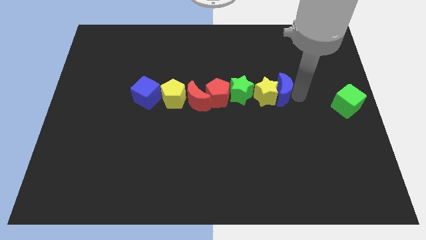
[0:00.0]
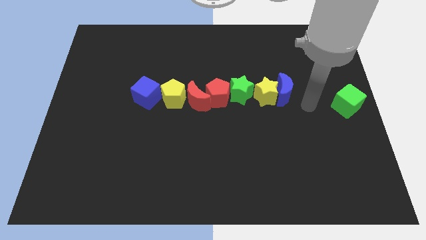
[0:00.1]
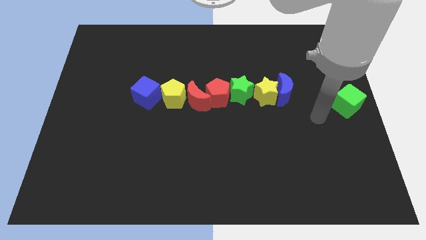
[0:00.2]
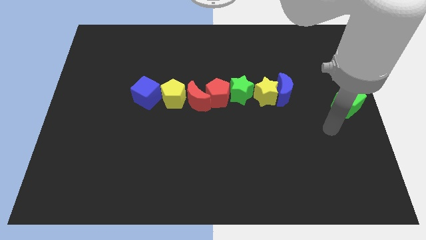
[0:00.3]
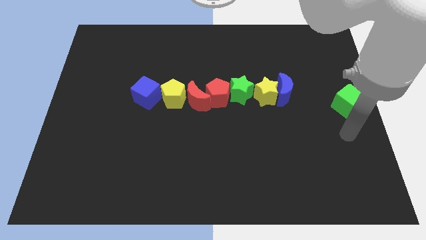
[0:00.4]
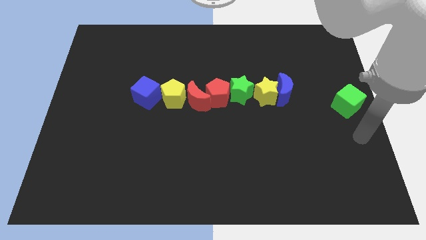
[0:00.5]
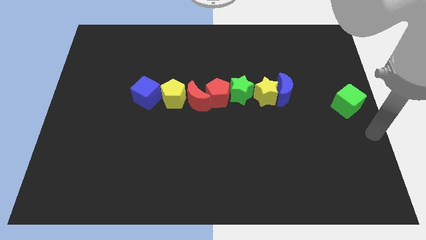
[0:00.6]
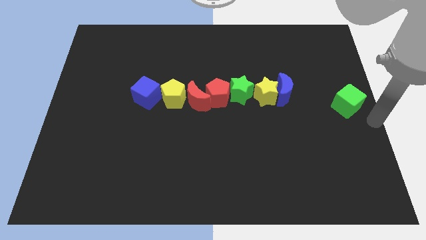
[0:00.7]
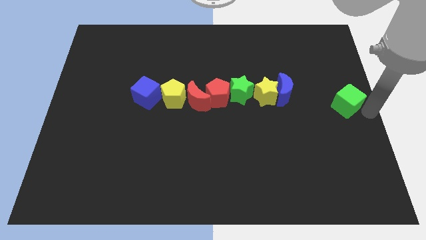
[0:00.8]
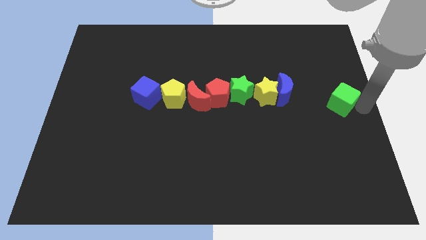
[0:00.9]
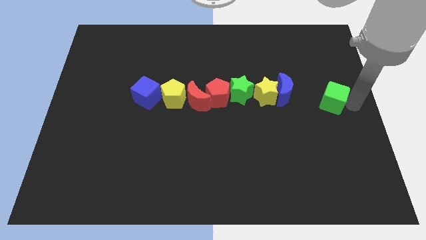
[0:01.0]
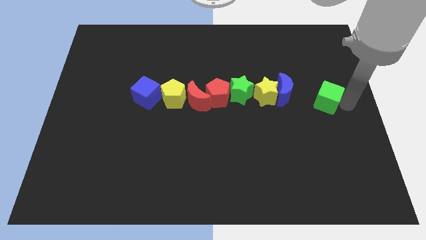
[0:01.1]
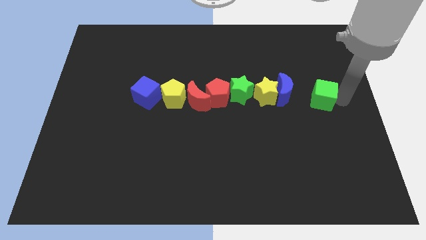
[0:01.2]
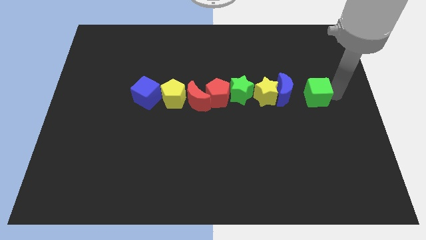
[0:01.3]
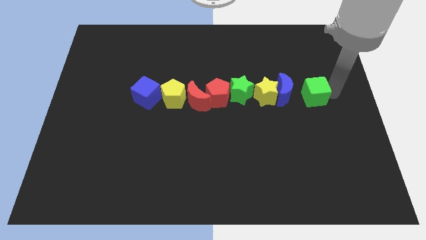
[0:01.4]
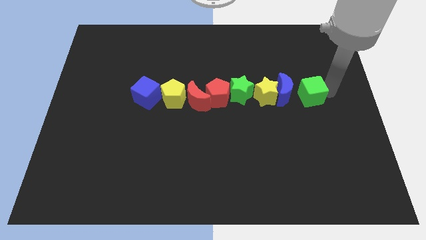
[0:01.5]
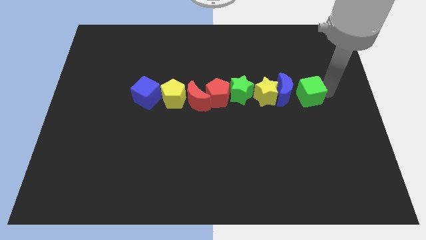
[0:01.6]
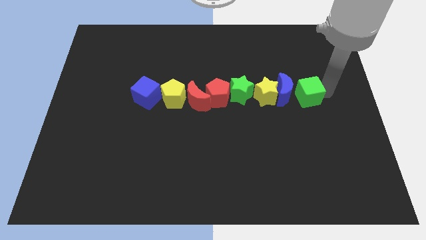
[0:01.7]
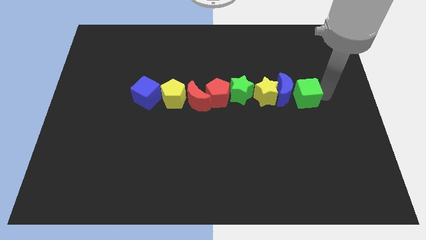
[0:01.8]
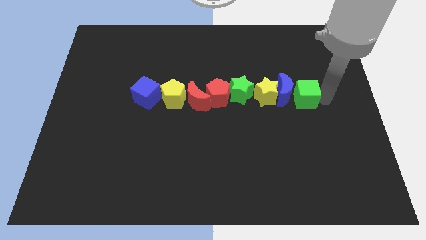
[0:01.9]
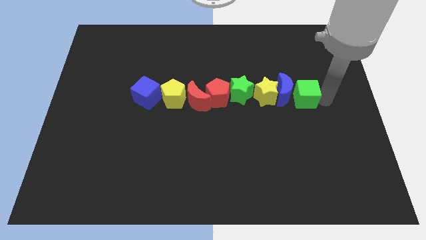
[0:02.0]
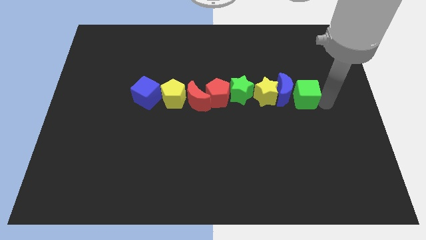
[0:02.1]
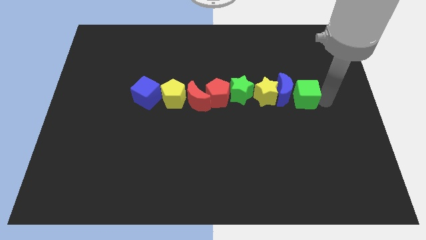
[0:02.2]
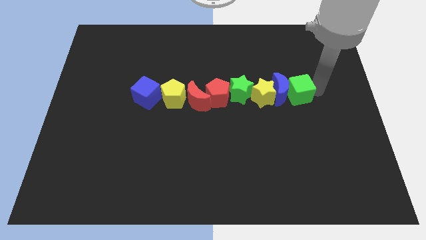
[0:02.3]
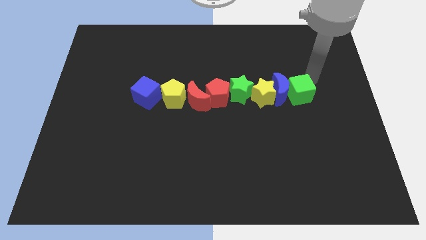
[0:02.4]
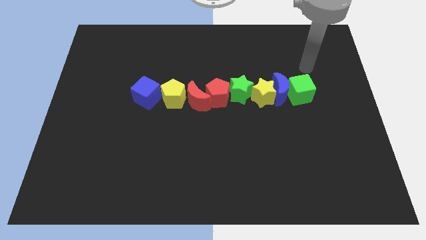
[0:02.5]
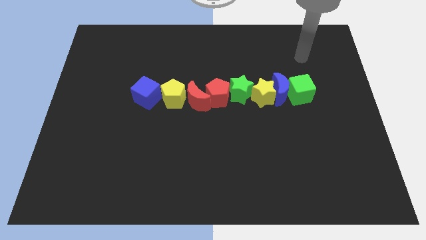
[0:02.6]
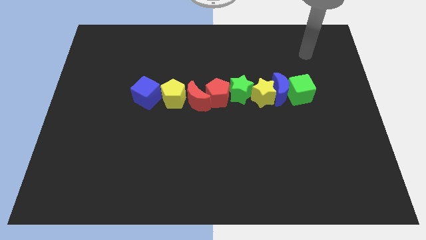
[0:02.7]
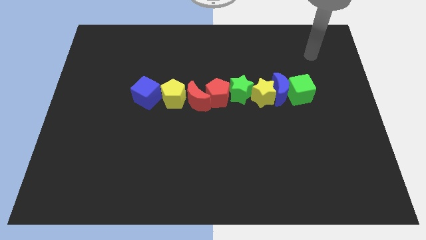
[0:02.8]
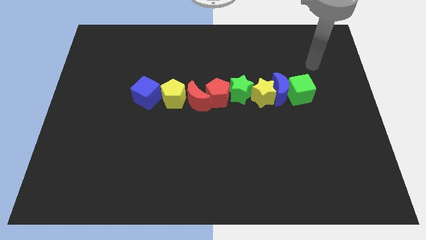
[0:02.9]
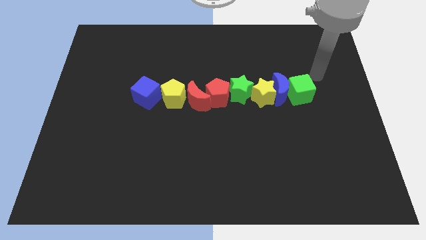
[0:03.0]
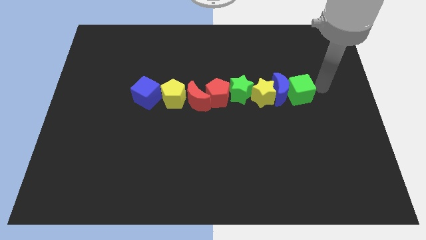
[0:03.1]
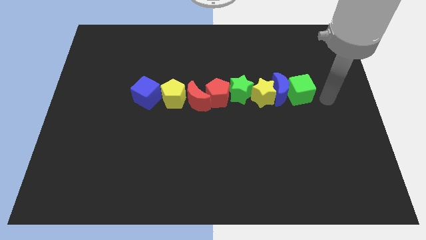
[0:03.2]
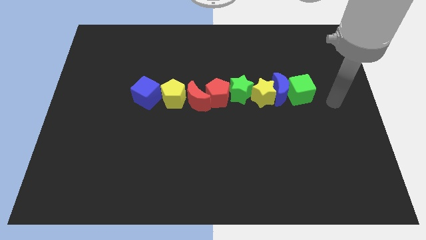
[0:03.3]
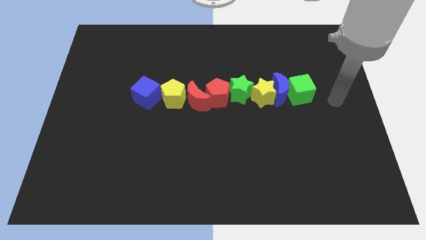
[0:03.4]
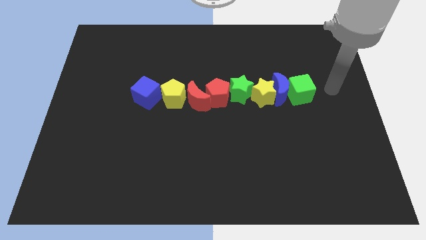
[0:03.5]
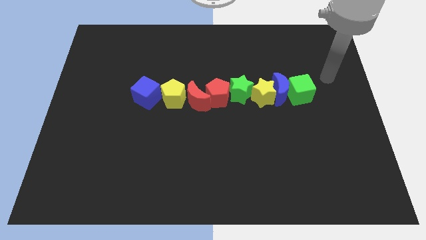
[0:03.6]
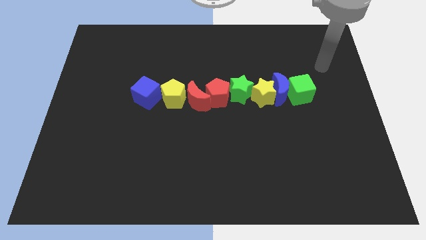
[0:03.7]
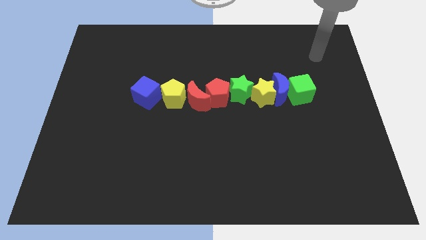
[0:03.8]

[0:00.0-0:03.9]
push the green cube to the right of the blue crescent

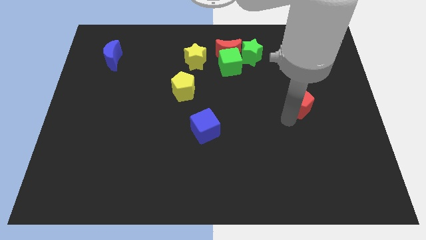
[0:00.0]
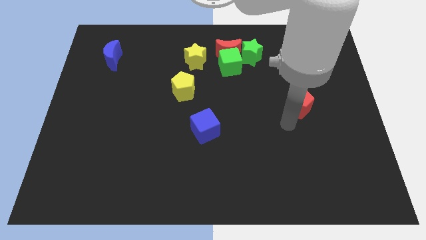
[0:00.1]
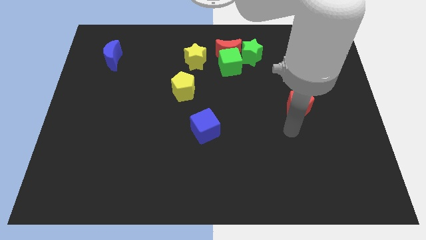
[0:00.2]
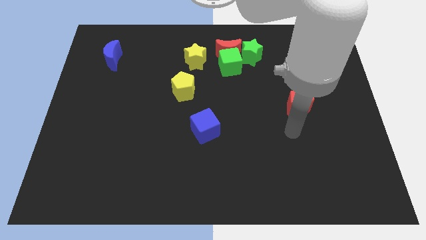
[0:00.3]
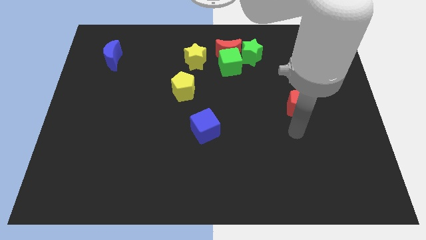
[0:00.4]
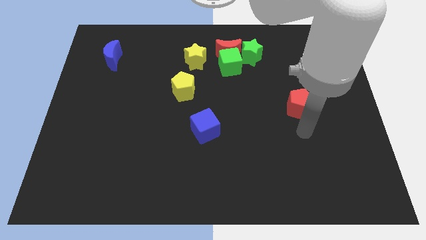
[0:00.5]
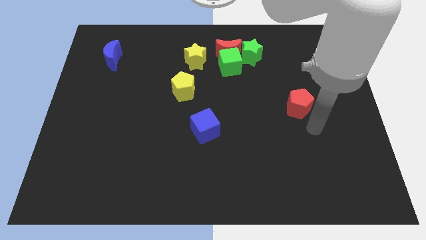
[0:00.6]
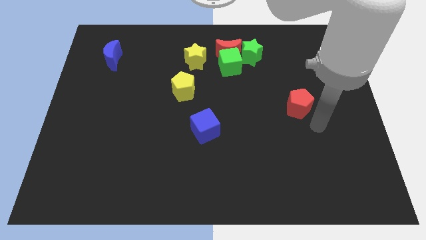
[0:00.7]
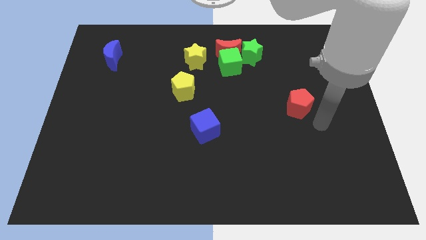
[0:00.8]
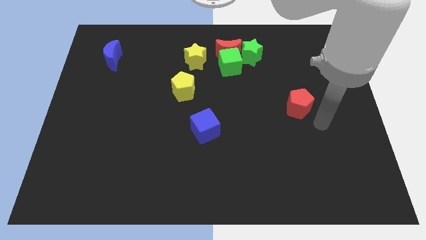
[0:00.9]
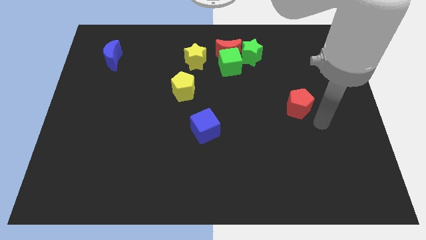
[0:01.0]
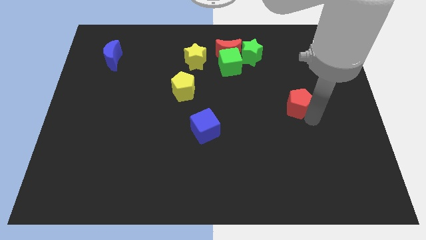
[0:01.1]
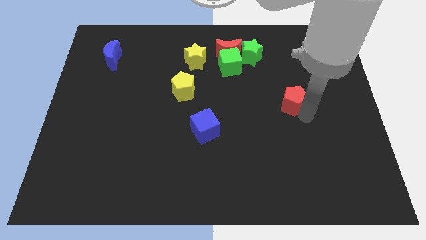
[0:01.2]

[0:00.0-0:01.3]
touch the red pentagon

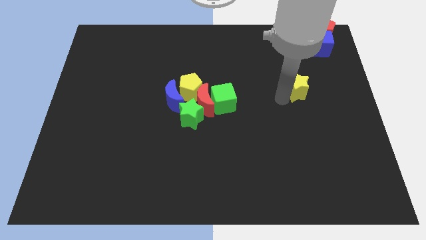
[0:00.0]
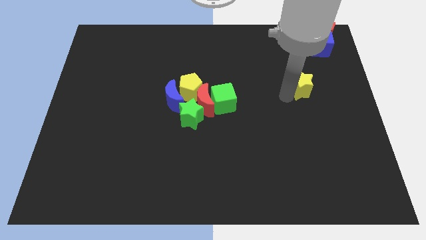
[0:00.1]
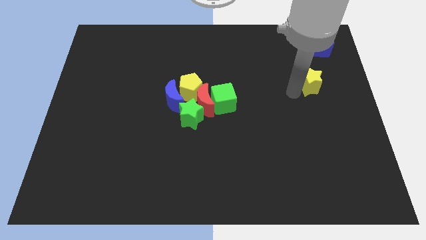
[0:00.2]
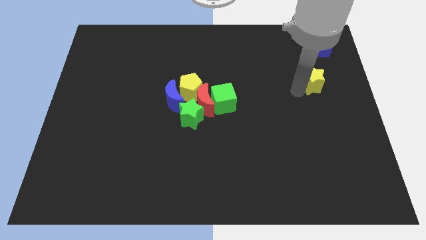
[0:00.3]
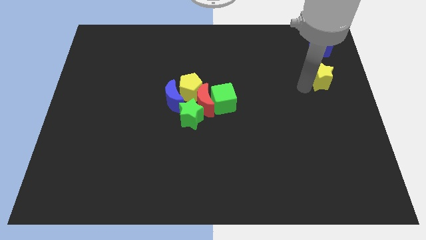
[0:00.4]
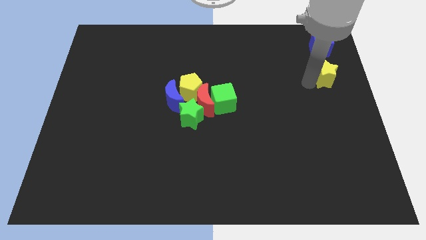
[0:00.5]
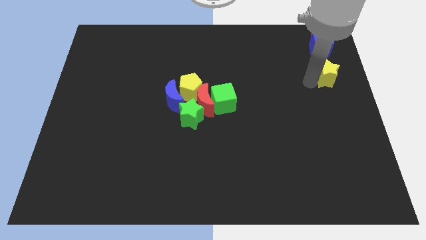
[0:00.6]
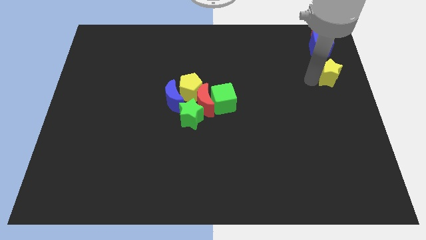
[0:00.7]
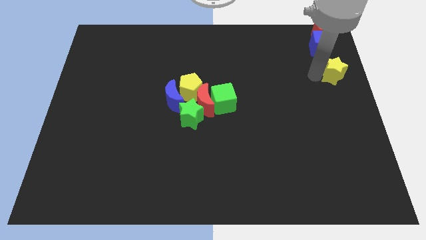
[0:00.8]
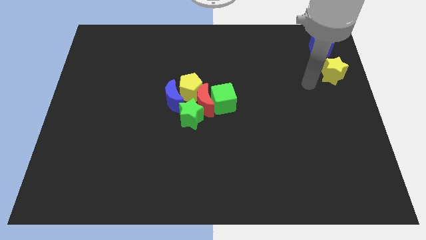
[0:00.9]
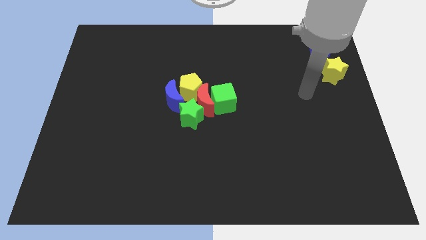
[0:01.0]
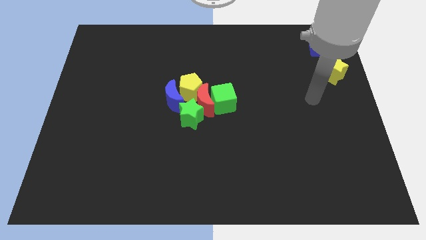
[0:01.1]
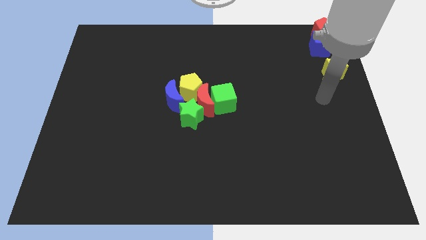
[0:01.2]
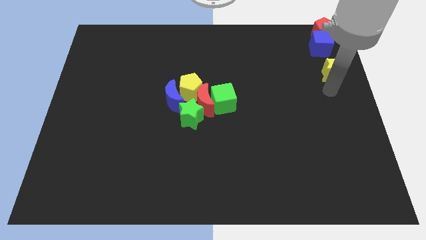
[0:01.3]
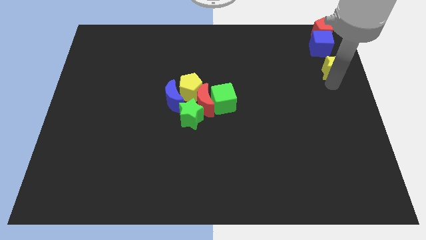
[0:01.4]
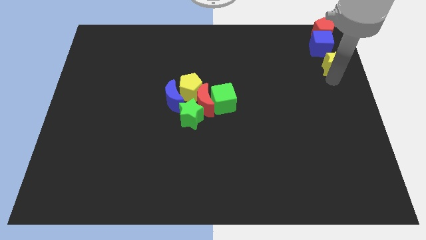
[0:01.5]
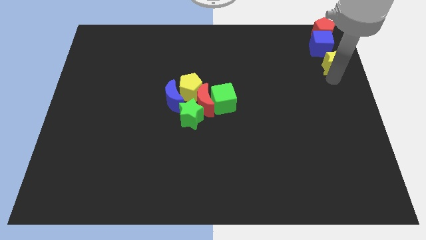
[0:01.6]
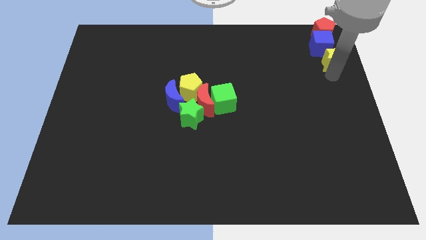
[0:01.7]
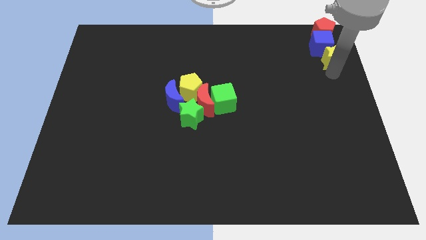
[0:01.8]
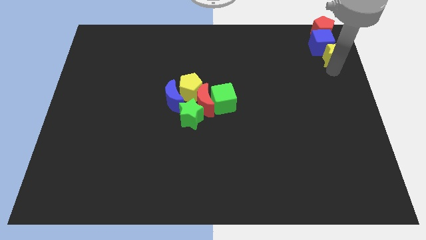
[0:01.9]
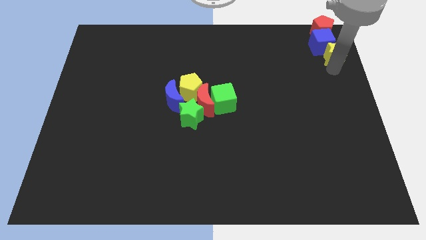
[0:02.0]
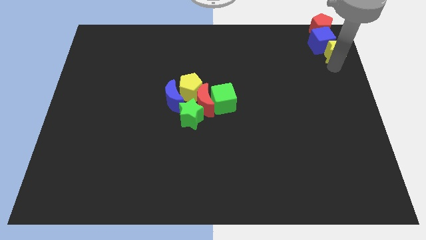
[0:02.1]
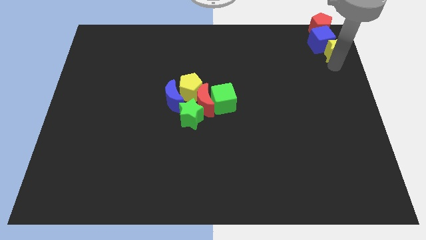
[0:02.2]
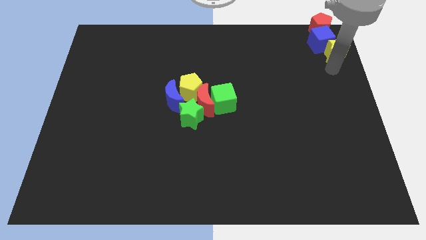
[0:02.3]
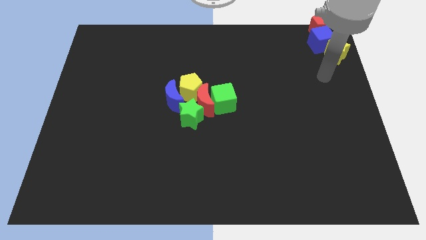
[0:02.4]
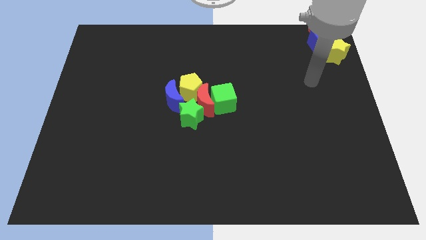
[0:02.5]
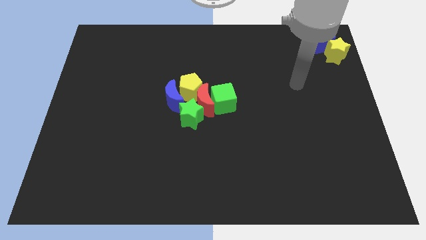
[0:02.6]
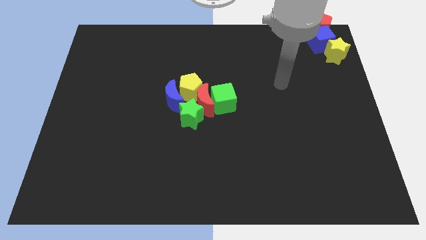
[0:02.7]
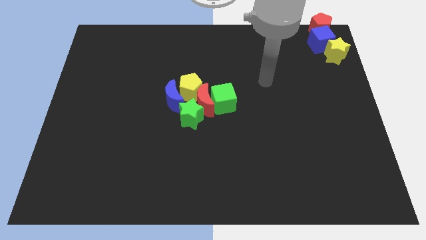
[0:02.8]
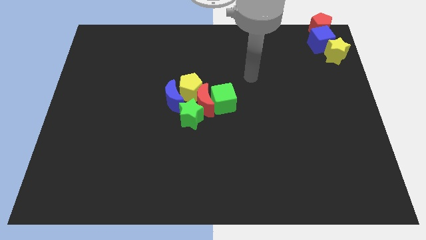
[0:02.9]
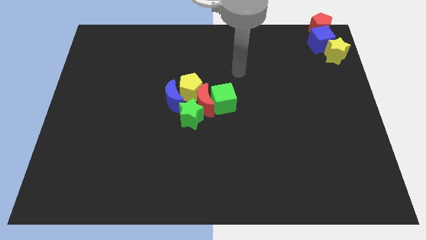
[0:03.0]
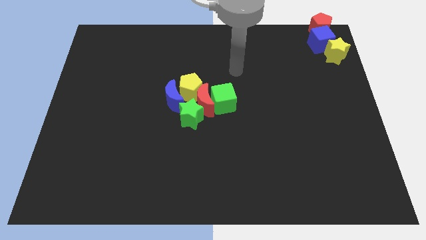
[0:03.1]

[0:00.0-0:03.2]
place the yellow star close to blue cube

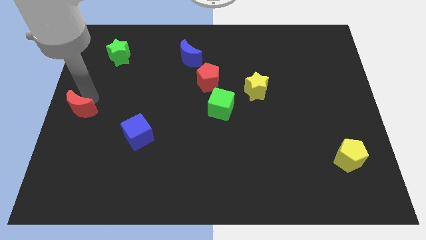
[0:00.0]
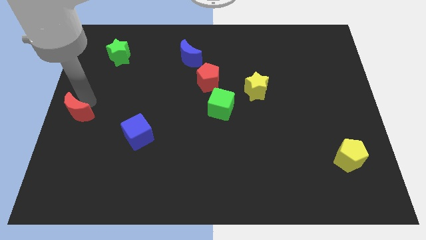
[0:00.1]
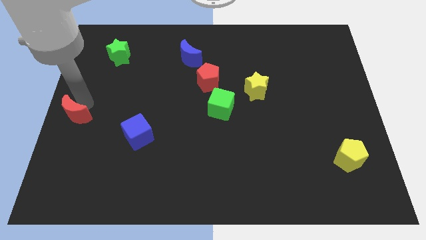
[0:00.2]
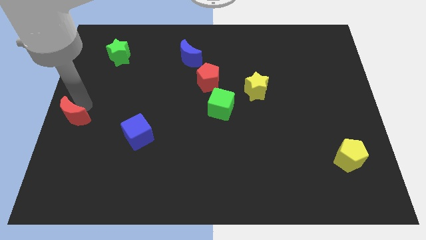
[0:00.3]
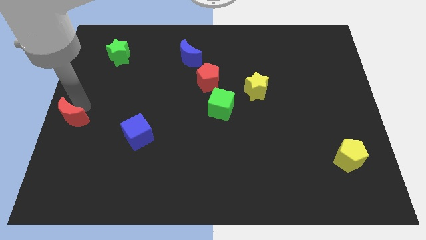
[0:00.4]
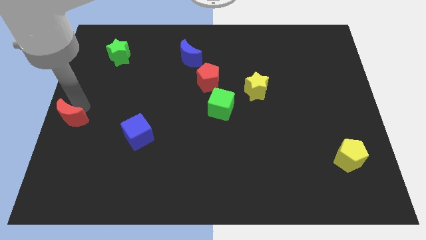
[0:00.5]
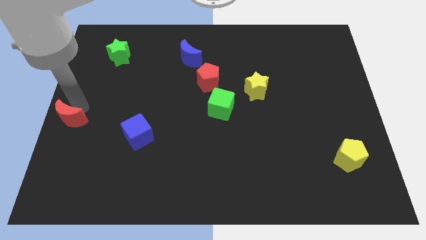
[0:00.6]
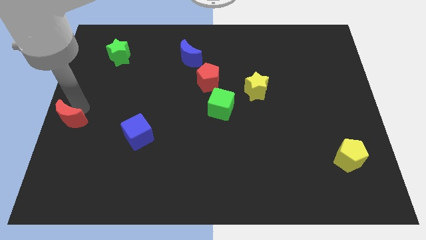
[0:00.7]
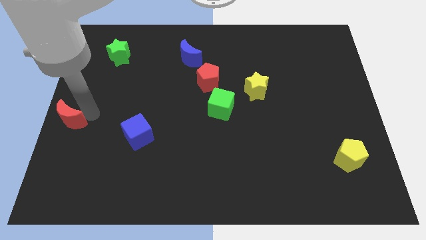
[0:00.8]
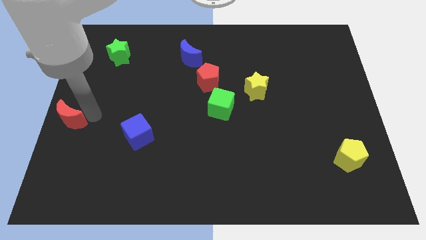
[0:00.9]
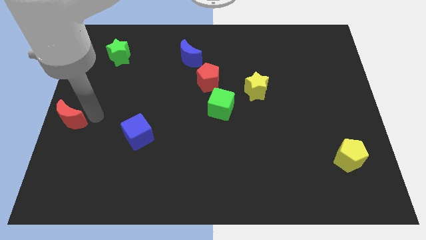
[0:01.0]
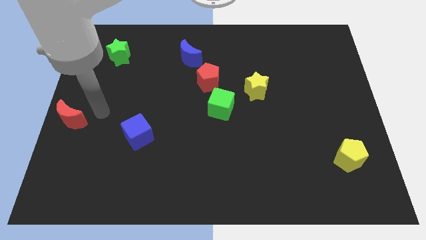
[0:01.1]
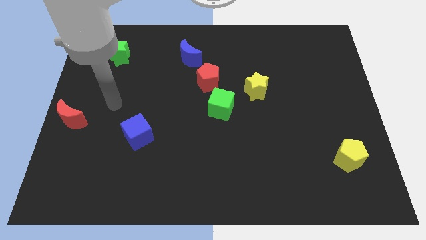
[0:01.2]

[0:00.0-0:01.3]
move the red moon to the middle left
